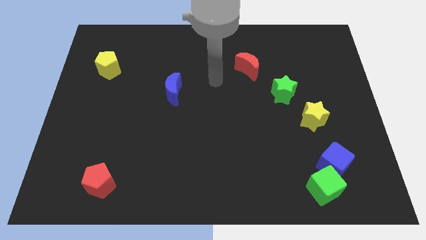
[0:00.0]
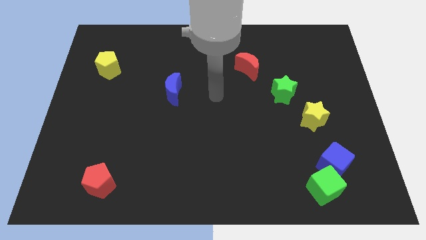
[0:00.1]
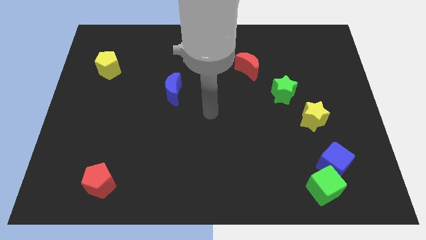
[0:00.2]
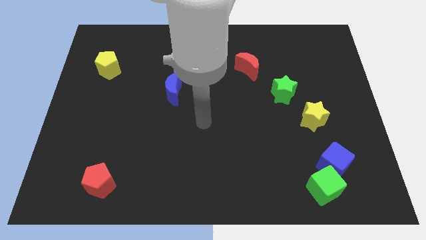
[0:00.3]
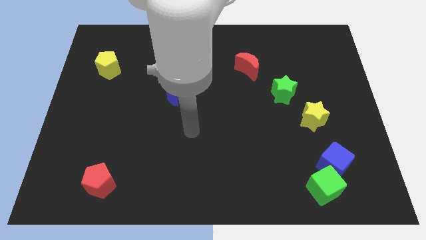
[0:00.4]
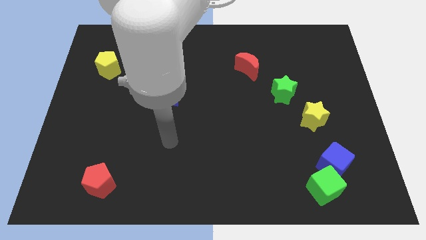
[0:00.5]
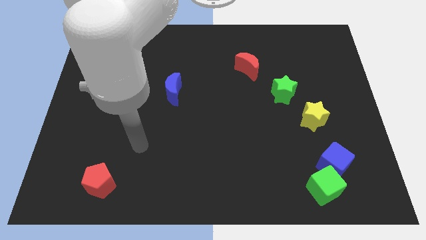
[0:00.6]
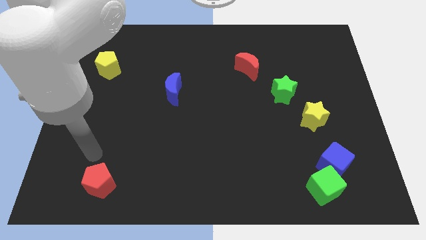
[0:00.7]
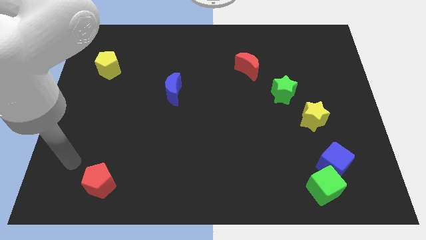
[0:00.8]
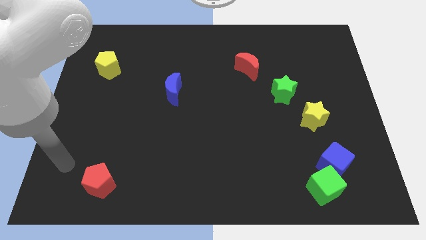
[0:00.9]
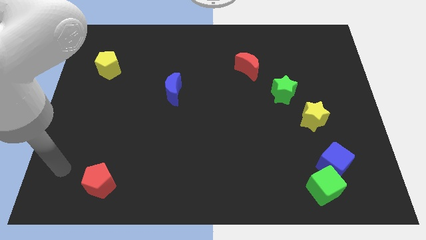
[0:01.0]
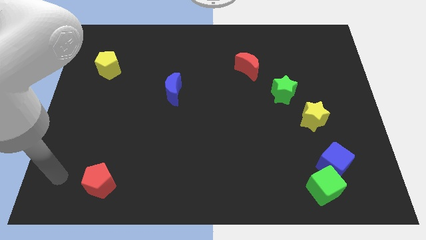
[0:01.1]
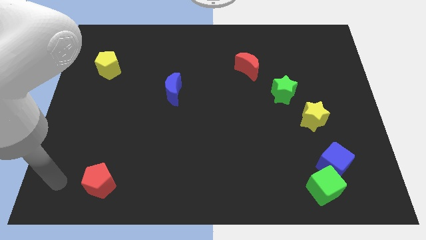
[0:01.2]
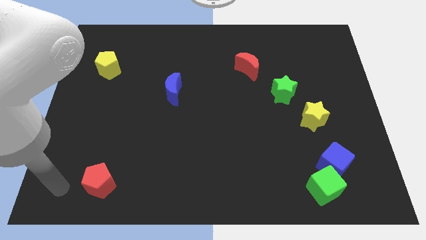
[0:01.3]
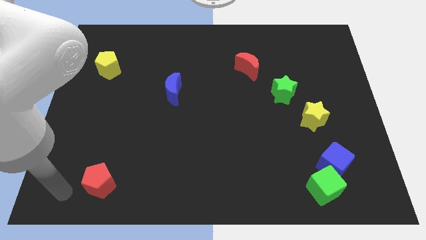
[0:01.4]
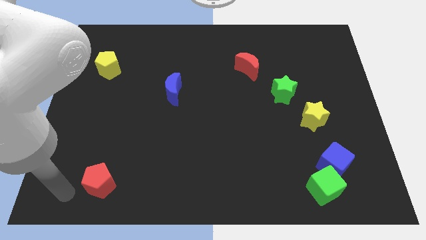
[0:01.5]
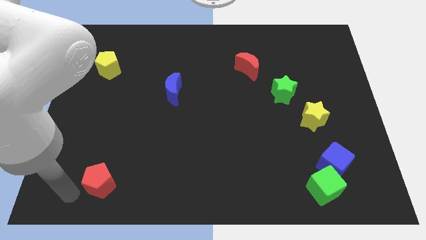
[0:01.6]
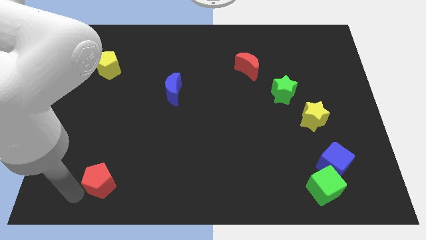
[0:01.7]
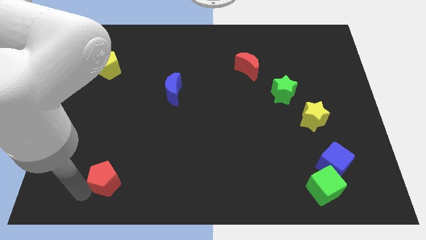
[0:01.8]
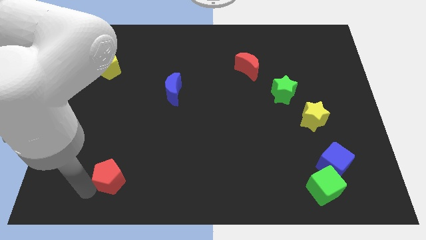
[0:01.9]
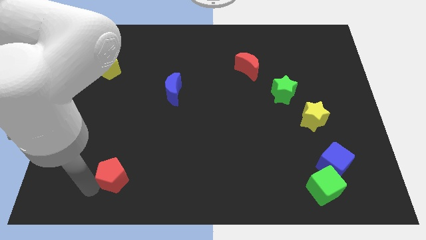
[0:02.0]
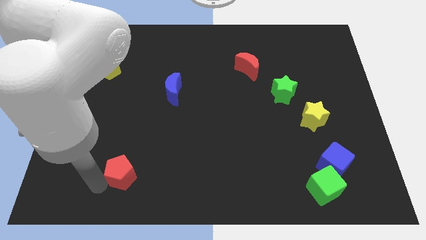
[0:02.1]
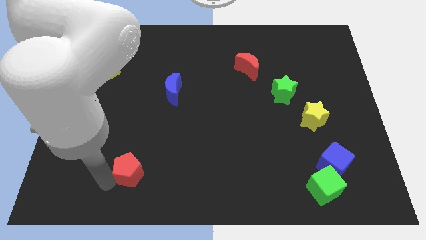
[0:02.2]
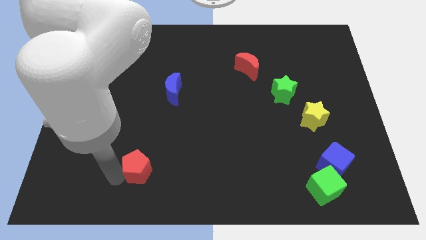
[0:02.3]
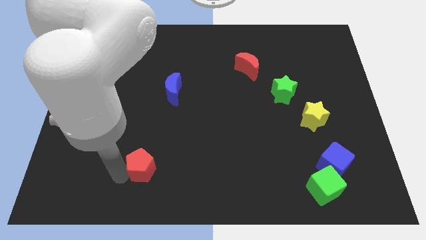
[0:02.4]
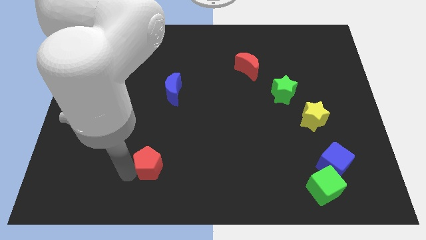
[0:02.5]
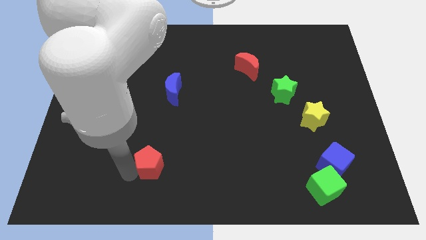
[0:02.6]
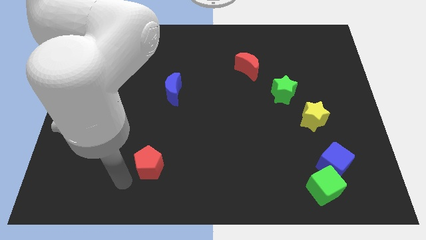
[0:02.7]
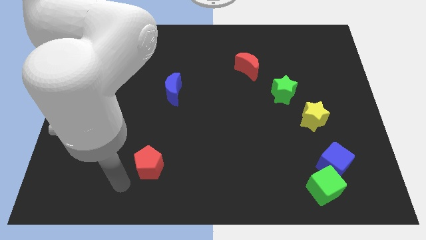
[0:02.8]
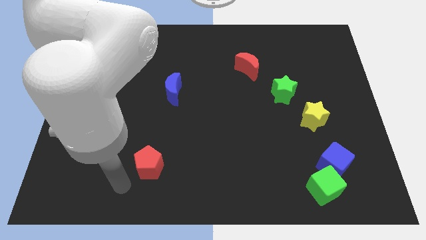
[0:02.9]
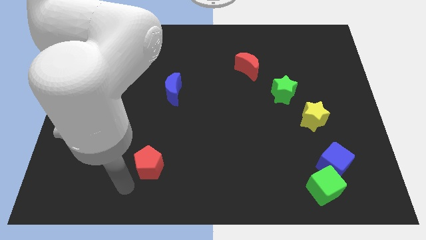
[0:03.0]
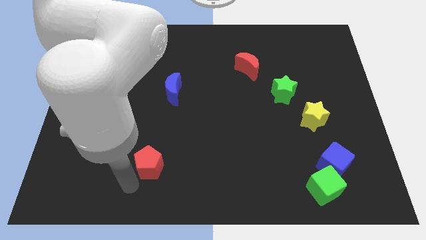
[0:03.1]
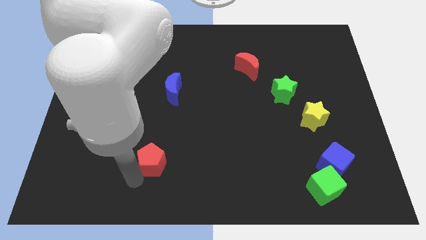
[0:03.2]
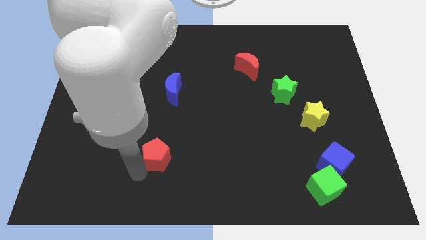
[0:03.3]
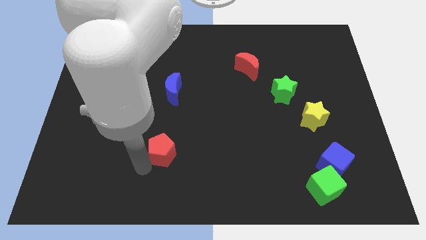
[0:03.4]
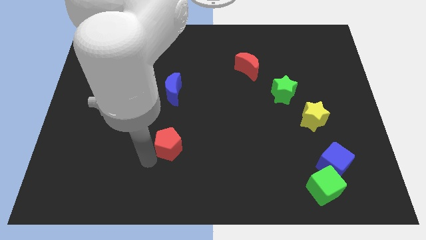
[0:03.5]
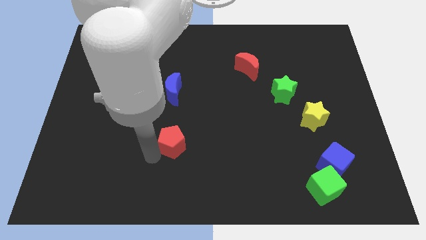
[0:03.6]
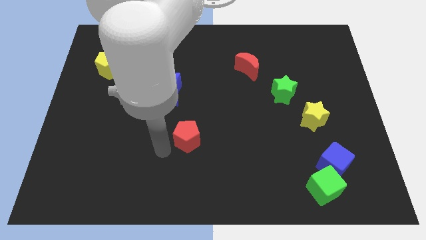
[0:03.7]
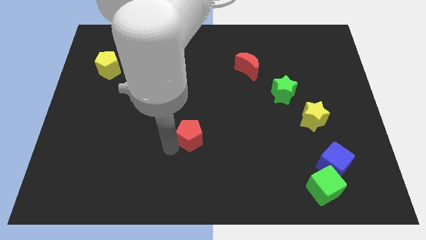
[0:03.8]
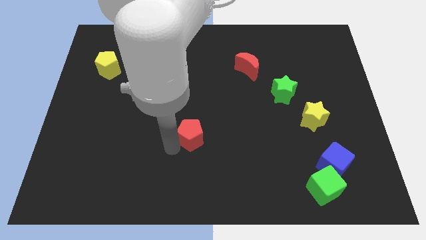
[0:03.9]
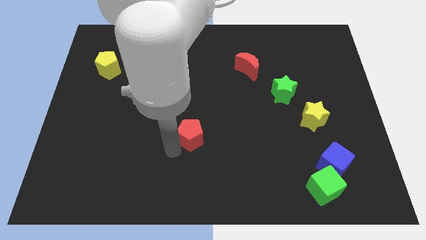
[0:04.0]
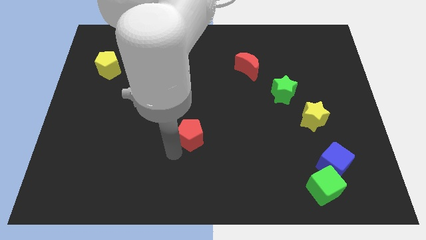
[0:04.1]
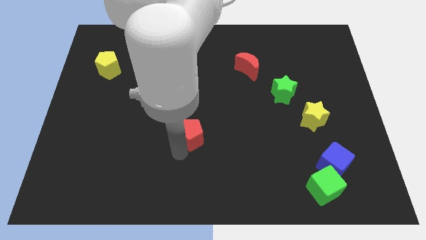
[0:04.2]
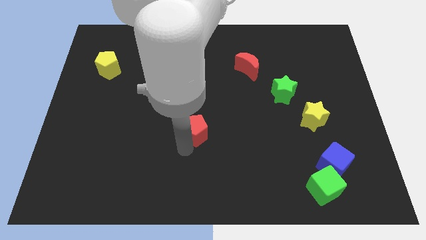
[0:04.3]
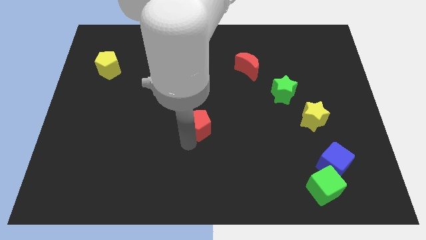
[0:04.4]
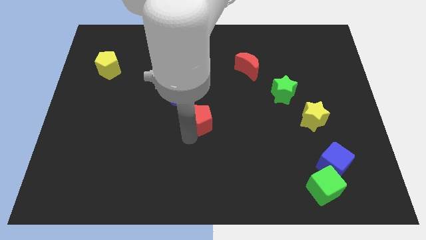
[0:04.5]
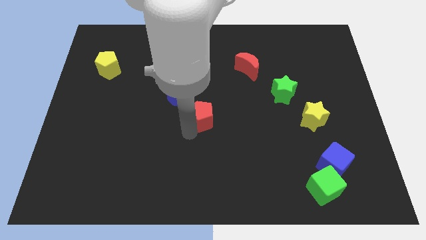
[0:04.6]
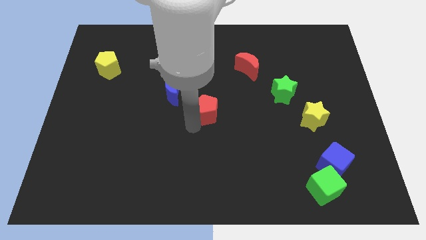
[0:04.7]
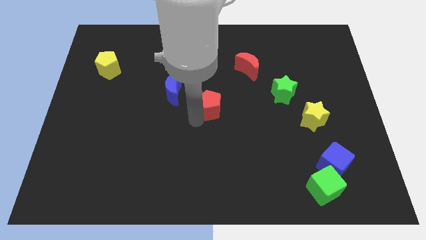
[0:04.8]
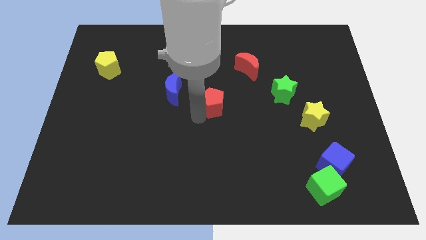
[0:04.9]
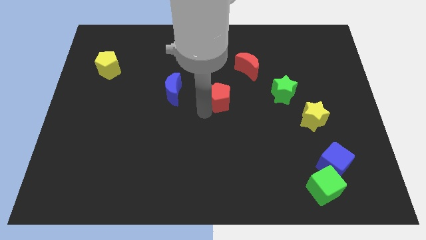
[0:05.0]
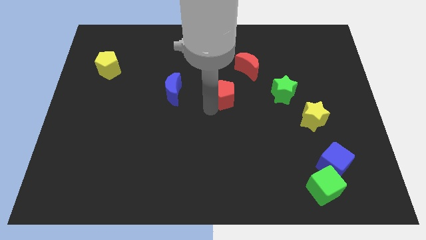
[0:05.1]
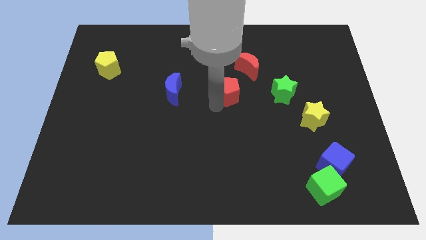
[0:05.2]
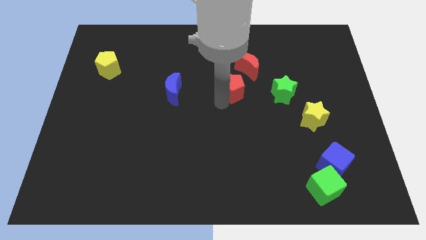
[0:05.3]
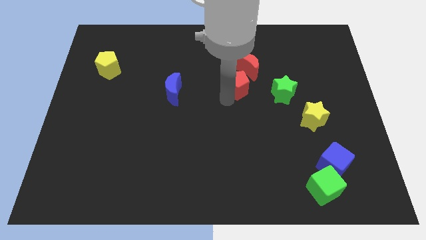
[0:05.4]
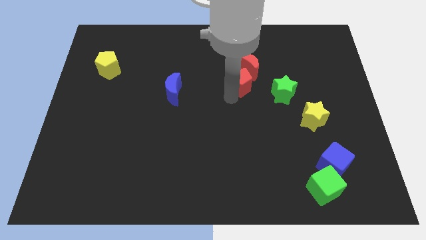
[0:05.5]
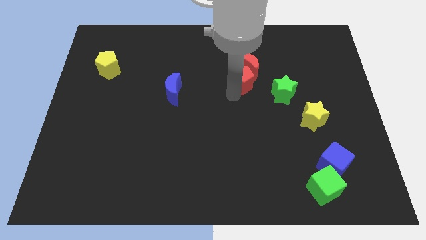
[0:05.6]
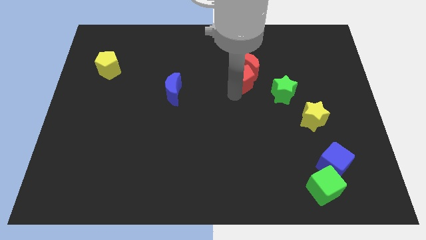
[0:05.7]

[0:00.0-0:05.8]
push the red pentagon close to the red moon

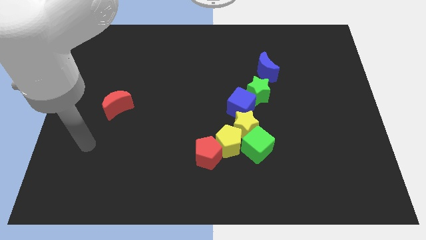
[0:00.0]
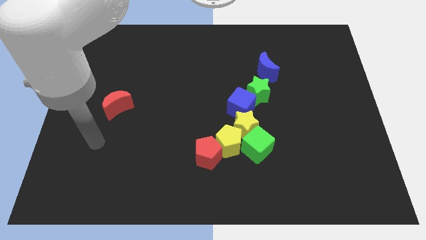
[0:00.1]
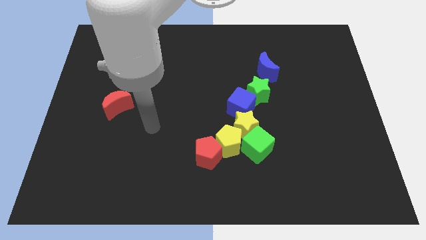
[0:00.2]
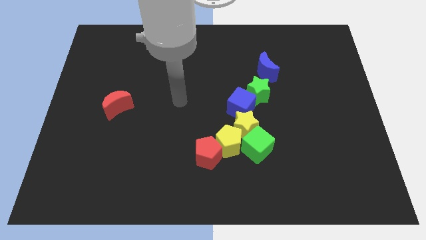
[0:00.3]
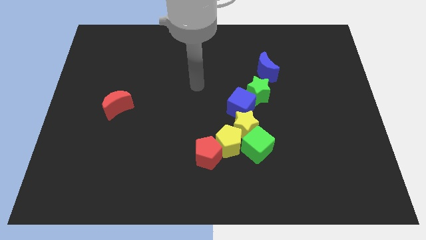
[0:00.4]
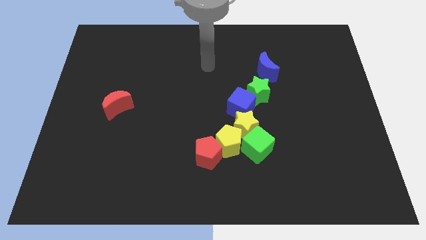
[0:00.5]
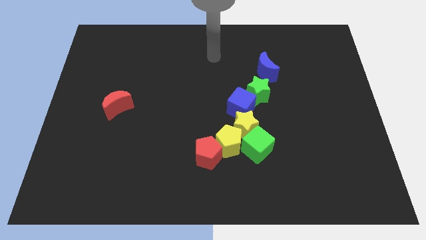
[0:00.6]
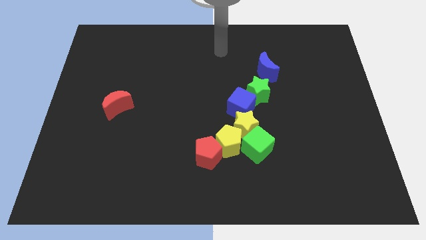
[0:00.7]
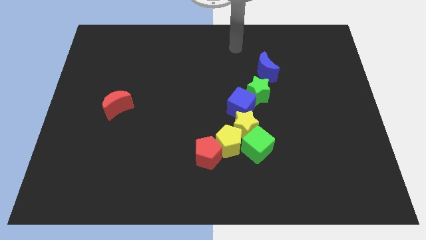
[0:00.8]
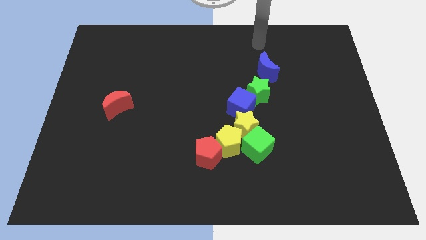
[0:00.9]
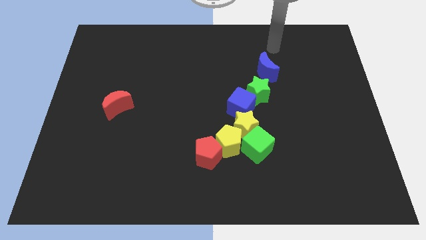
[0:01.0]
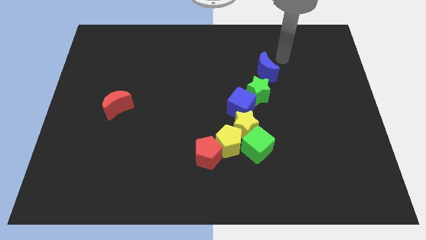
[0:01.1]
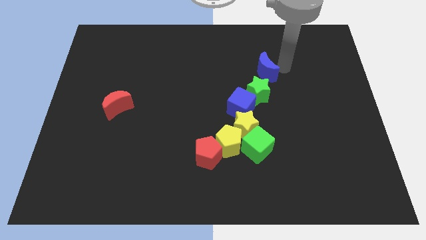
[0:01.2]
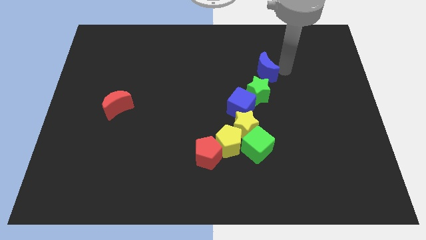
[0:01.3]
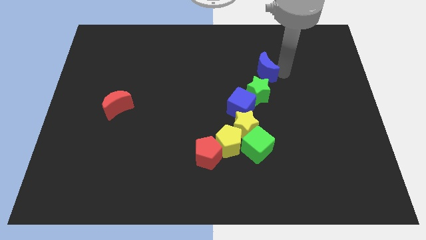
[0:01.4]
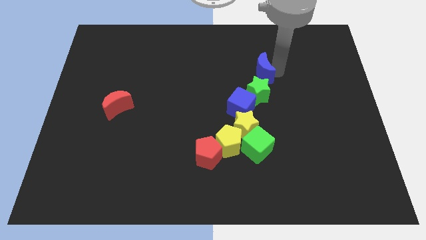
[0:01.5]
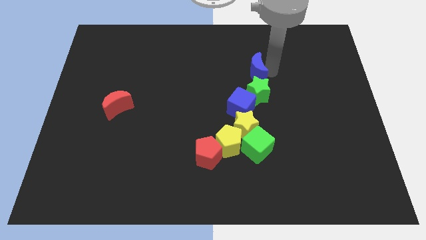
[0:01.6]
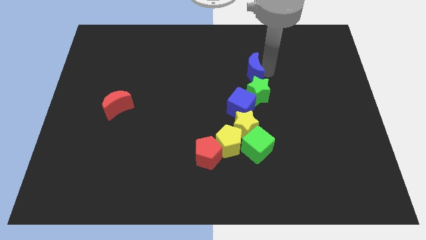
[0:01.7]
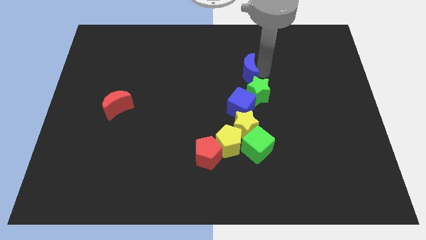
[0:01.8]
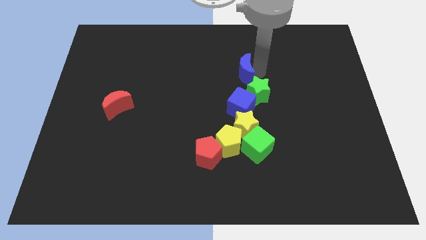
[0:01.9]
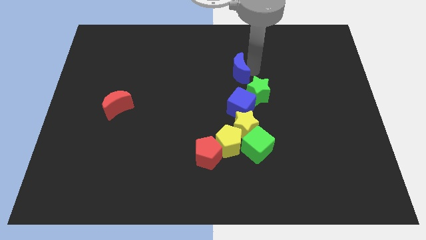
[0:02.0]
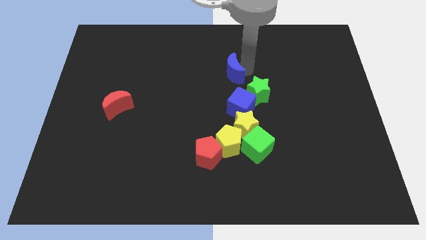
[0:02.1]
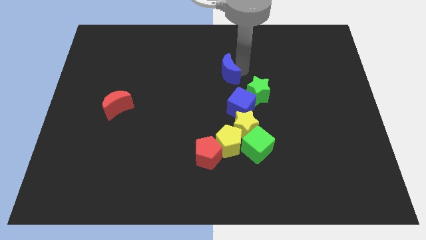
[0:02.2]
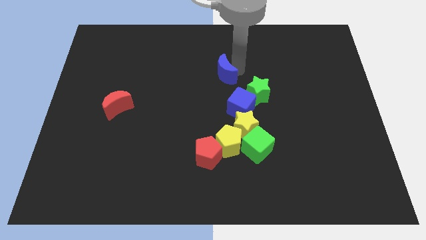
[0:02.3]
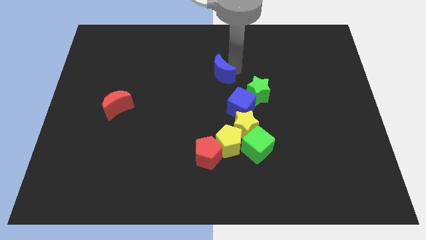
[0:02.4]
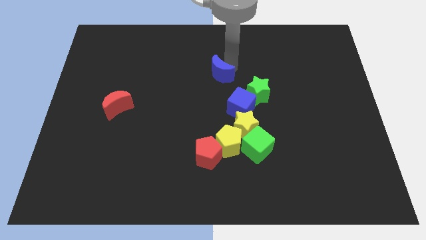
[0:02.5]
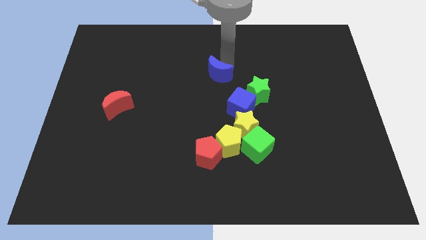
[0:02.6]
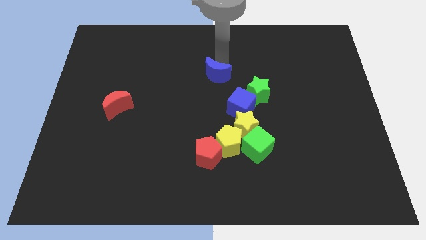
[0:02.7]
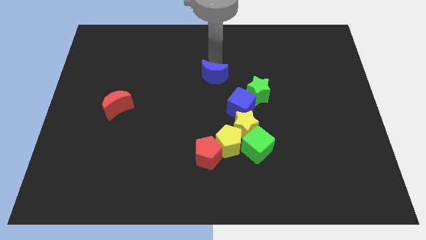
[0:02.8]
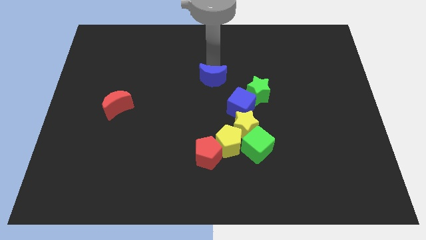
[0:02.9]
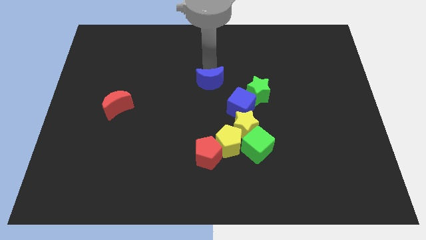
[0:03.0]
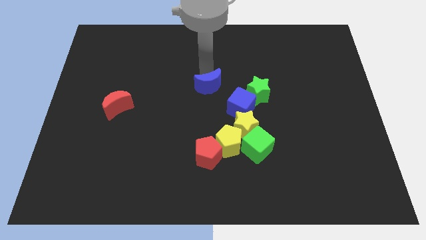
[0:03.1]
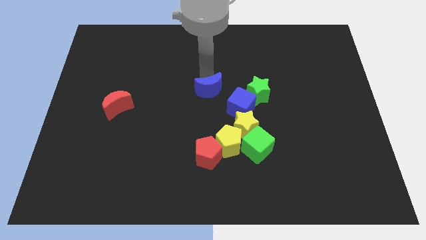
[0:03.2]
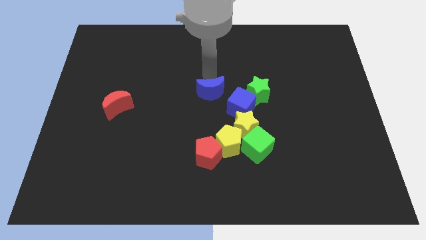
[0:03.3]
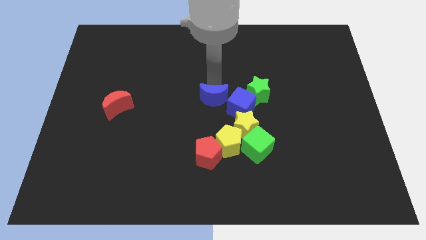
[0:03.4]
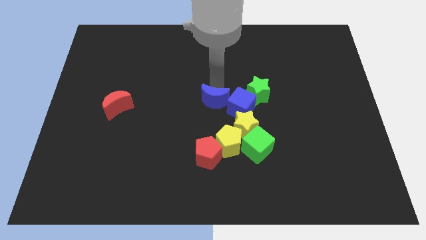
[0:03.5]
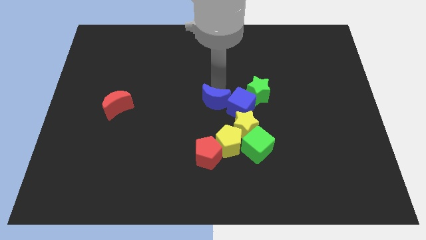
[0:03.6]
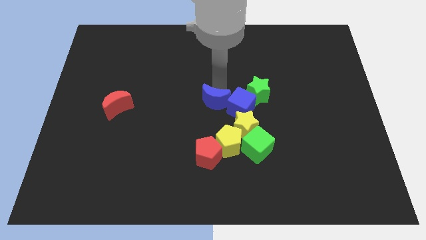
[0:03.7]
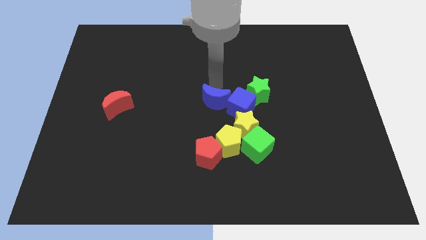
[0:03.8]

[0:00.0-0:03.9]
put the blue moon towards the blue cube
